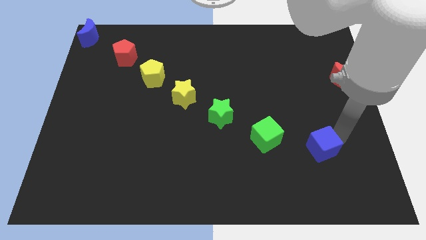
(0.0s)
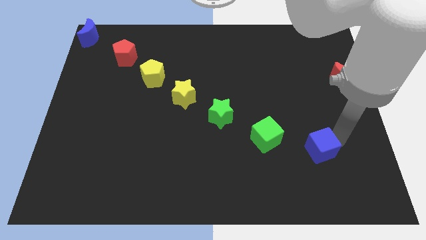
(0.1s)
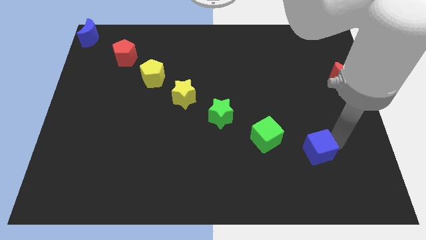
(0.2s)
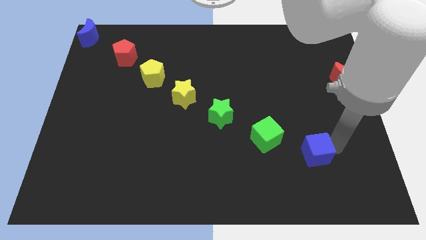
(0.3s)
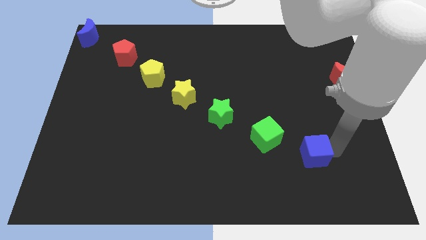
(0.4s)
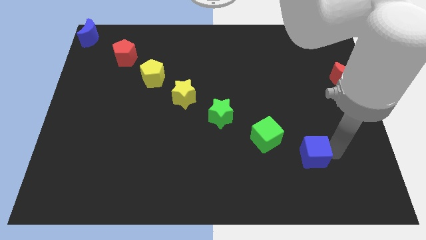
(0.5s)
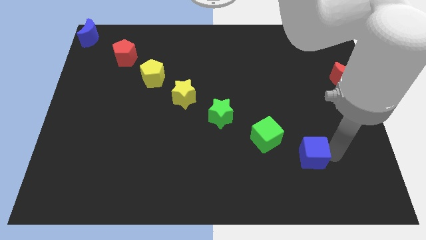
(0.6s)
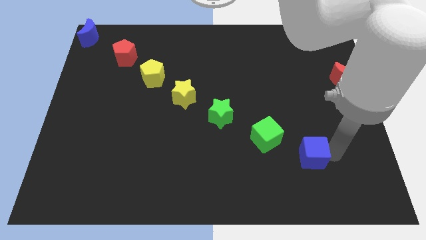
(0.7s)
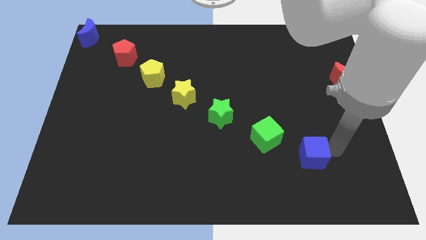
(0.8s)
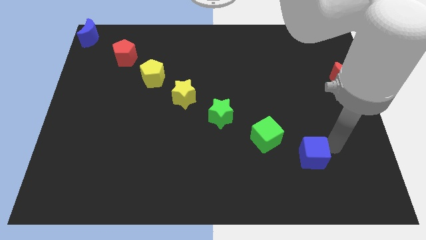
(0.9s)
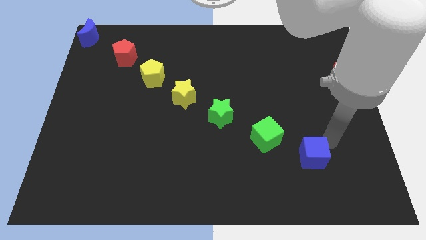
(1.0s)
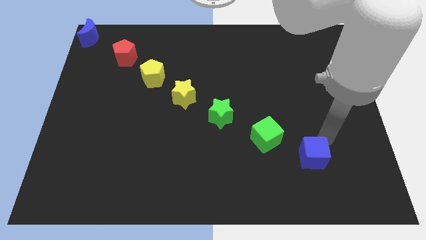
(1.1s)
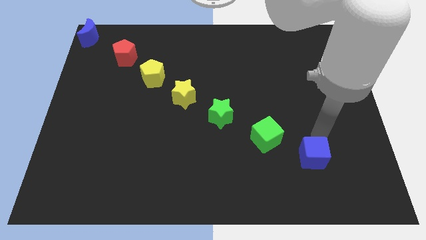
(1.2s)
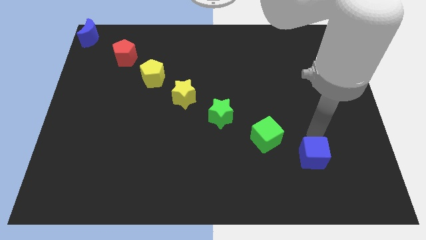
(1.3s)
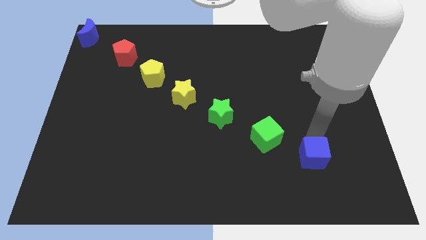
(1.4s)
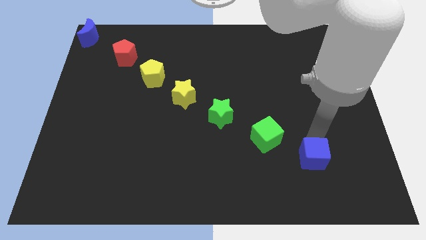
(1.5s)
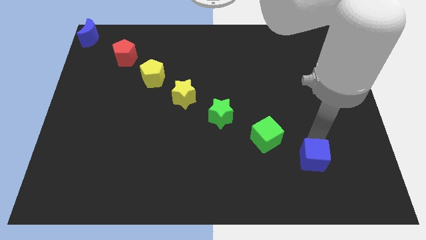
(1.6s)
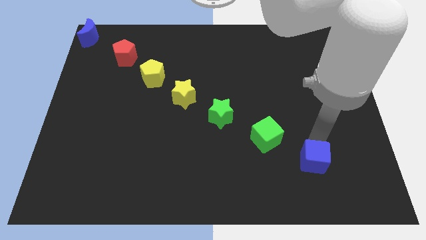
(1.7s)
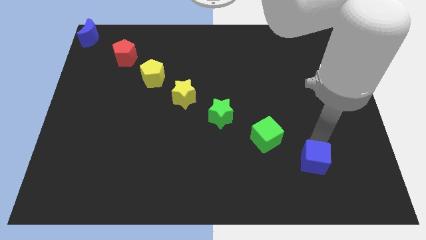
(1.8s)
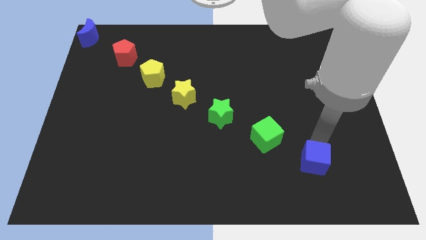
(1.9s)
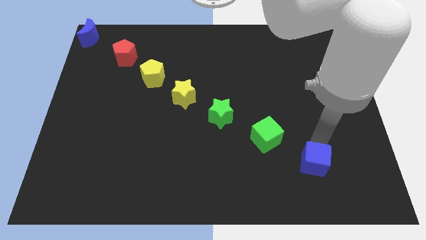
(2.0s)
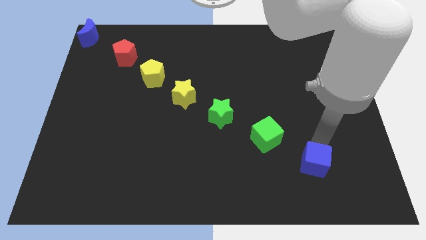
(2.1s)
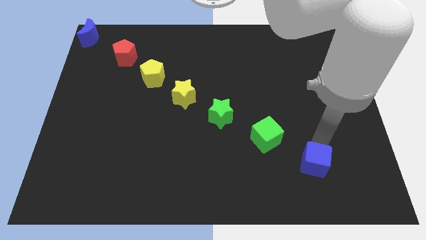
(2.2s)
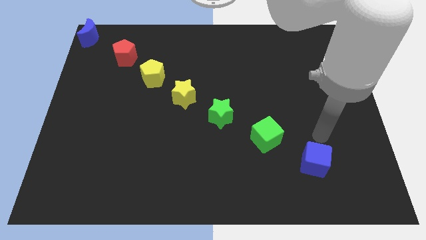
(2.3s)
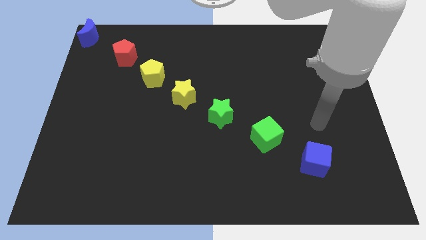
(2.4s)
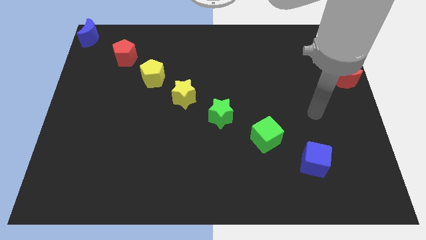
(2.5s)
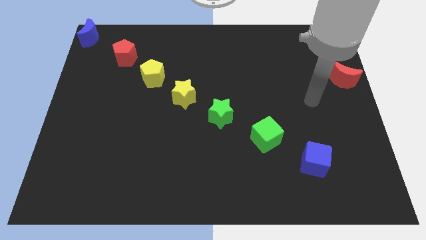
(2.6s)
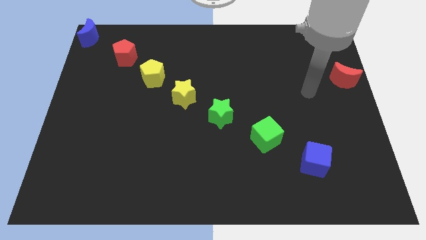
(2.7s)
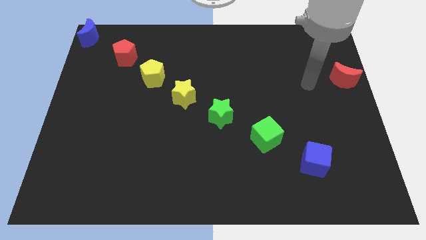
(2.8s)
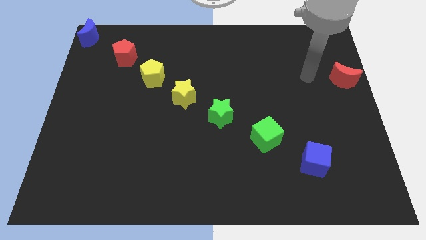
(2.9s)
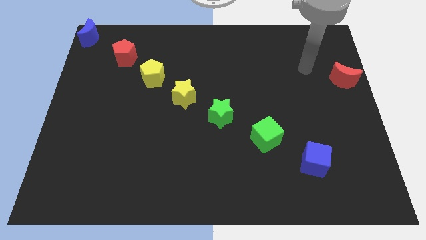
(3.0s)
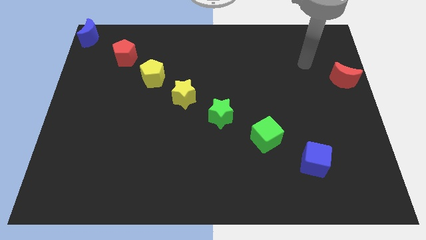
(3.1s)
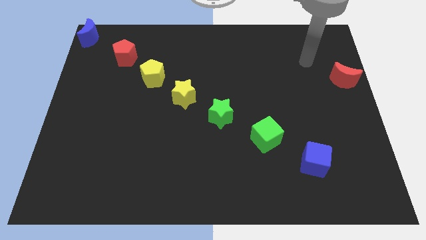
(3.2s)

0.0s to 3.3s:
place blue cube diagonally right to green cube

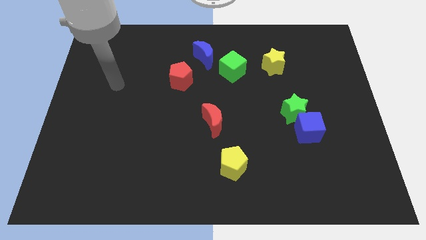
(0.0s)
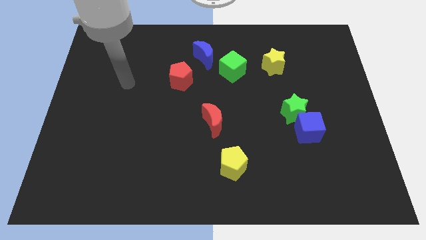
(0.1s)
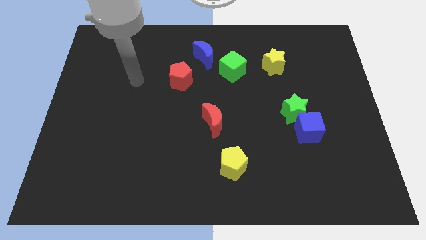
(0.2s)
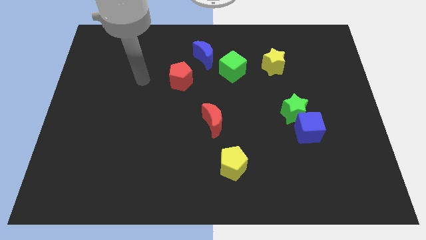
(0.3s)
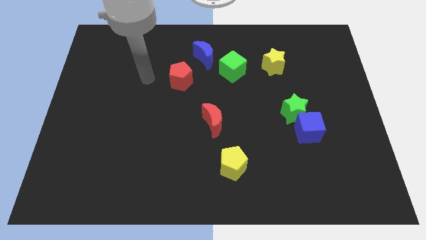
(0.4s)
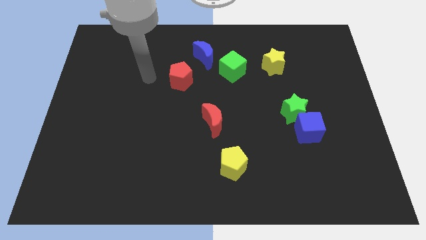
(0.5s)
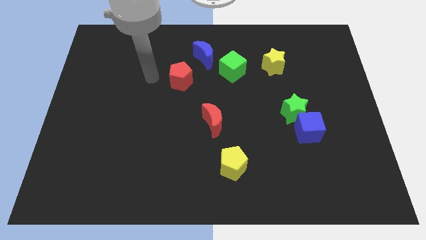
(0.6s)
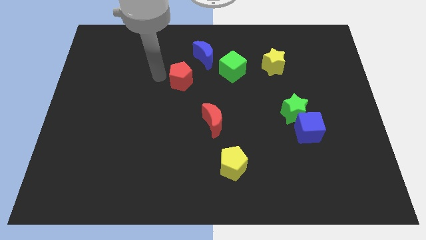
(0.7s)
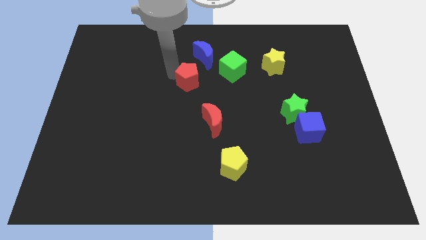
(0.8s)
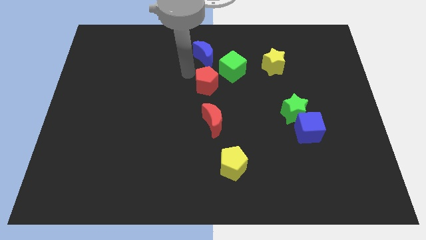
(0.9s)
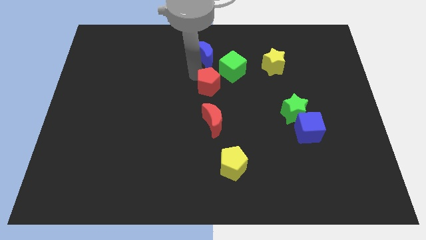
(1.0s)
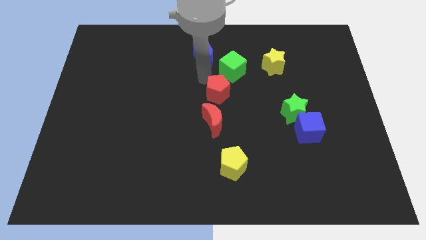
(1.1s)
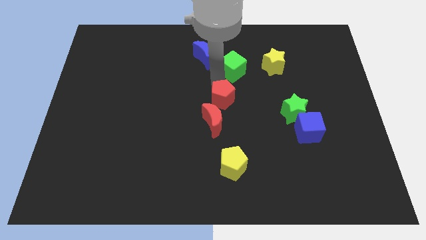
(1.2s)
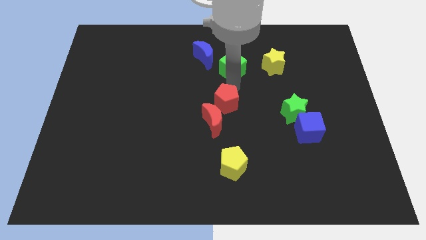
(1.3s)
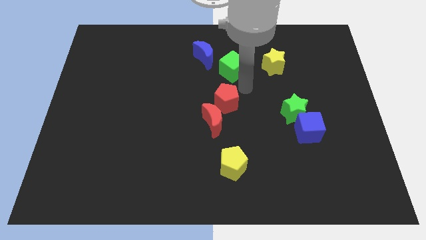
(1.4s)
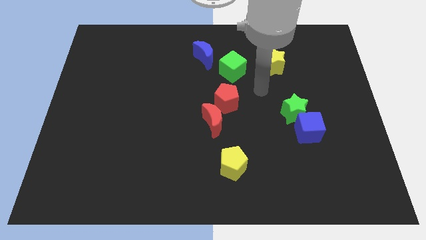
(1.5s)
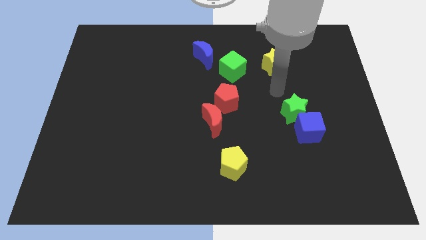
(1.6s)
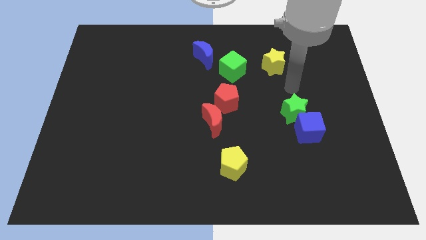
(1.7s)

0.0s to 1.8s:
push the red pentagon to the right side of the board

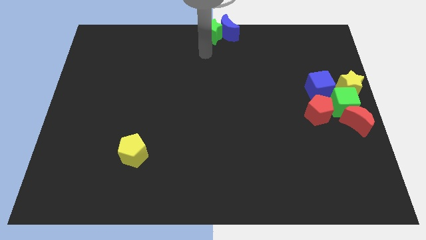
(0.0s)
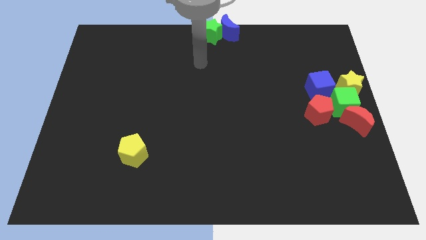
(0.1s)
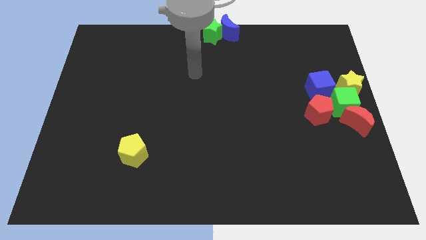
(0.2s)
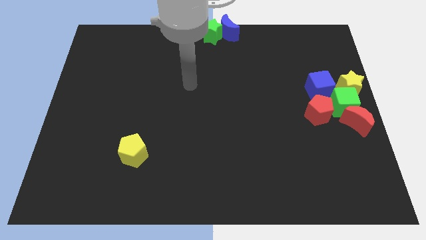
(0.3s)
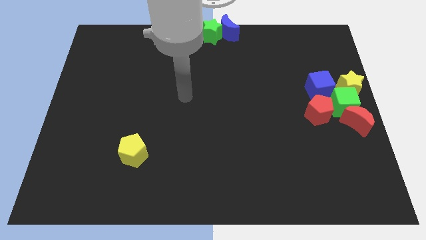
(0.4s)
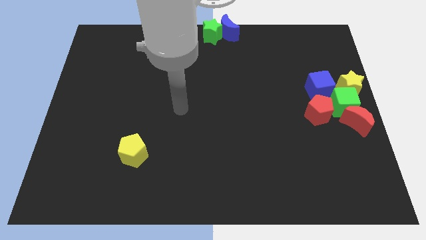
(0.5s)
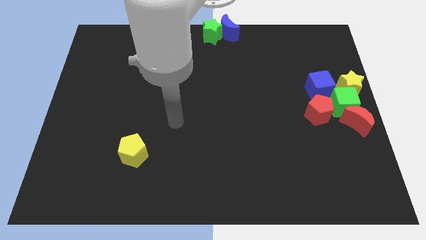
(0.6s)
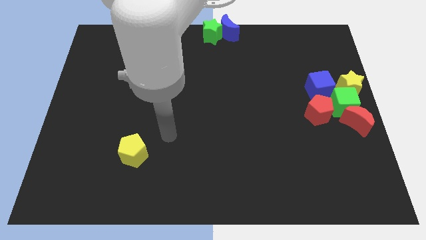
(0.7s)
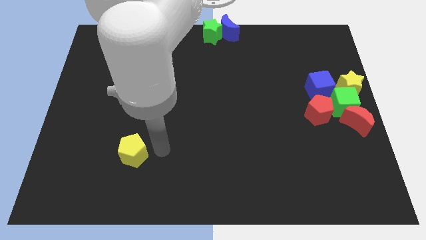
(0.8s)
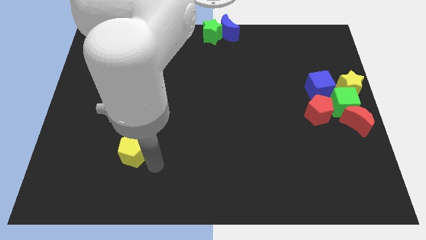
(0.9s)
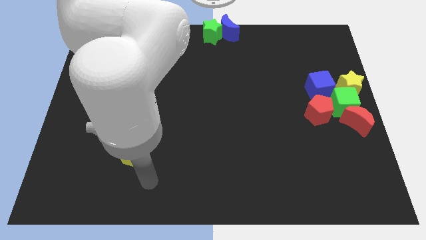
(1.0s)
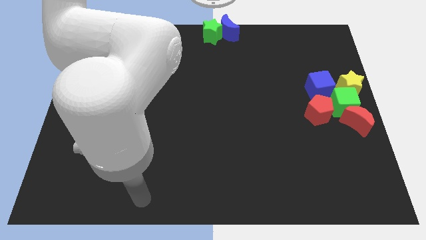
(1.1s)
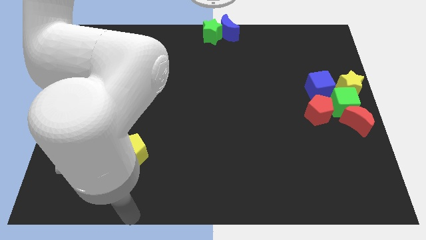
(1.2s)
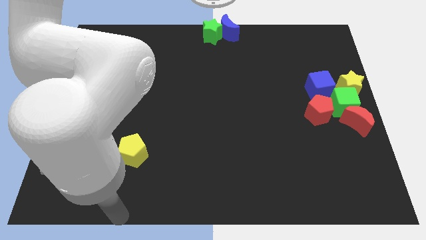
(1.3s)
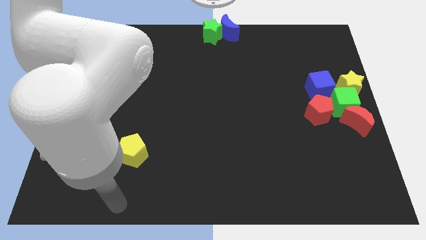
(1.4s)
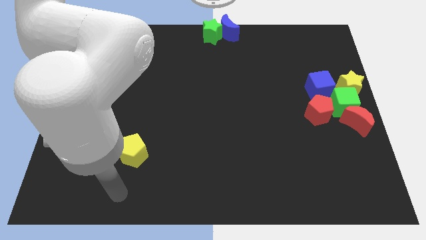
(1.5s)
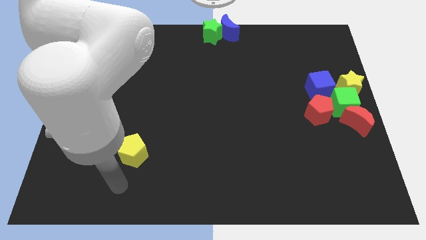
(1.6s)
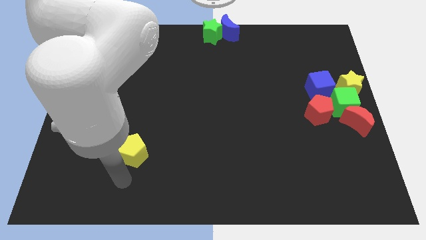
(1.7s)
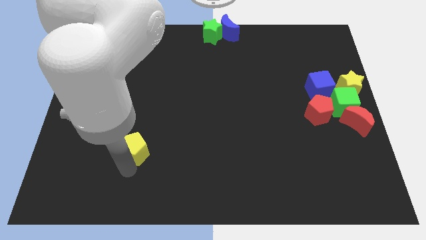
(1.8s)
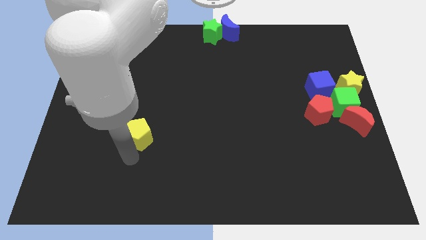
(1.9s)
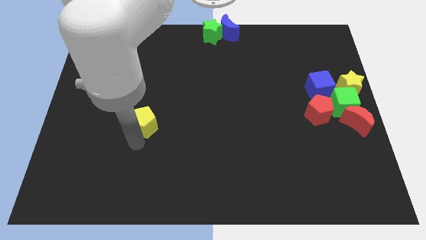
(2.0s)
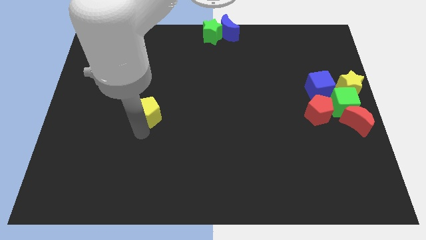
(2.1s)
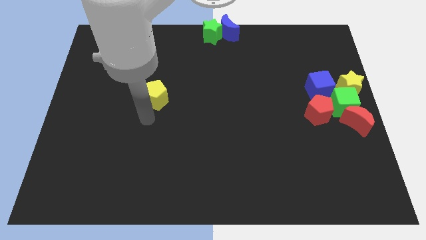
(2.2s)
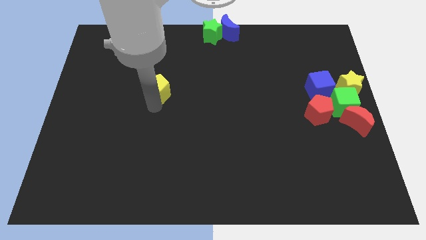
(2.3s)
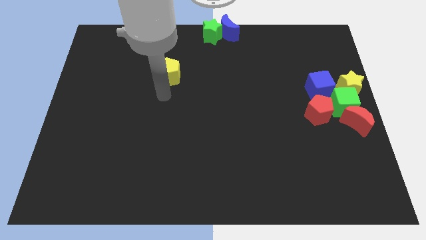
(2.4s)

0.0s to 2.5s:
push the yellow pentagon to the left of the blue cube

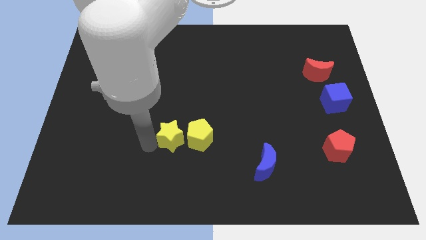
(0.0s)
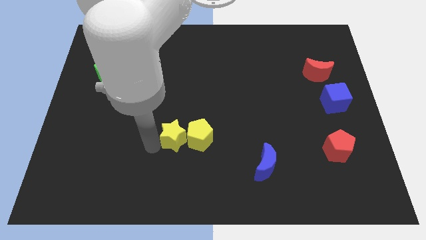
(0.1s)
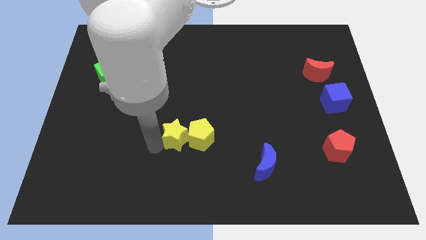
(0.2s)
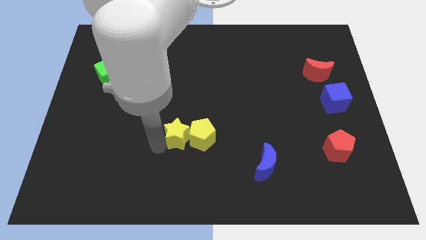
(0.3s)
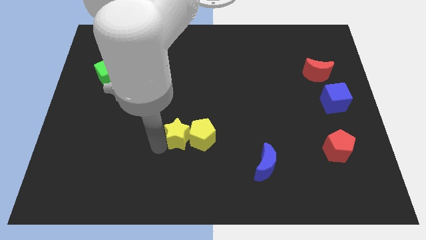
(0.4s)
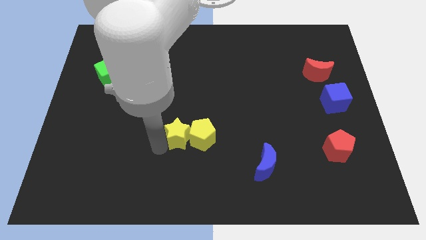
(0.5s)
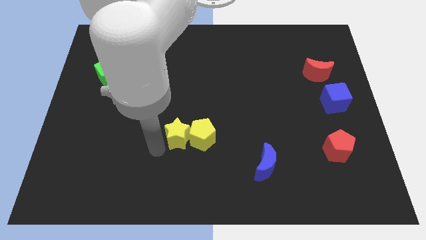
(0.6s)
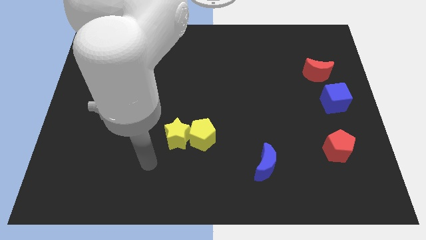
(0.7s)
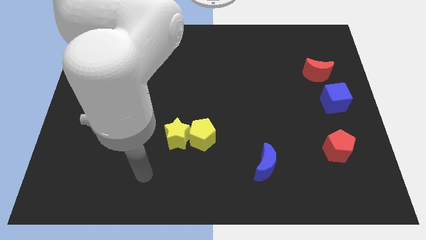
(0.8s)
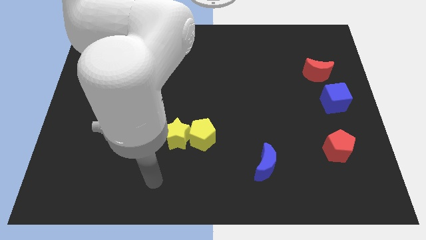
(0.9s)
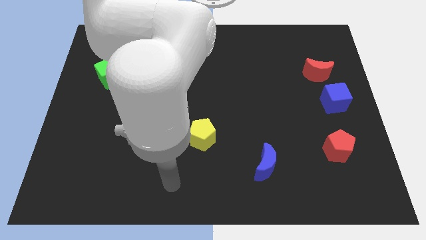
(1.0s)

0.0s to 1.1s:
push the yellow star into the yellow pentagon

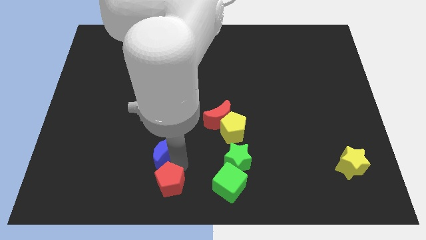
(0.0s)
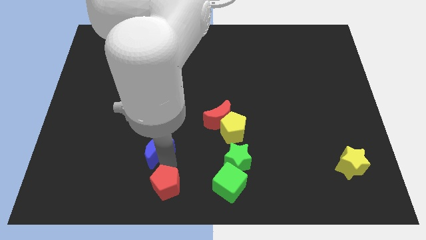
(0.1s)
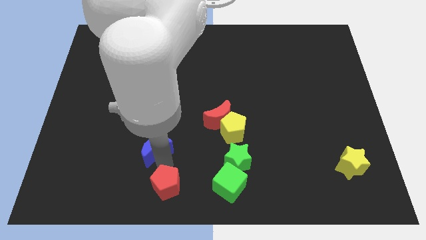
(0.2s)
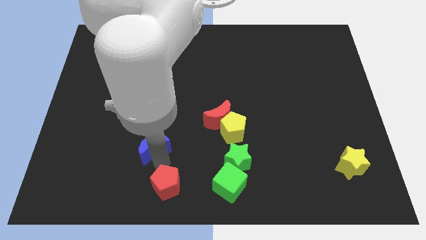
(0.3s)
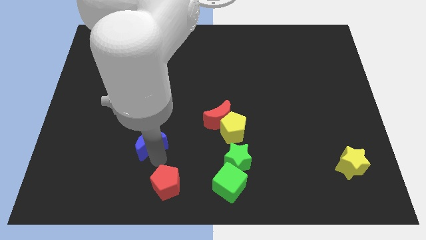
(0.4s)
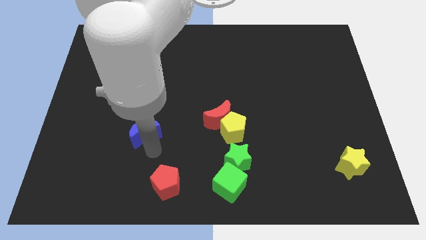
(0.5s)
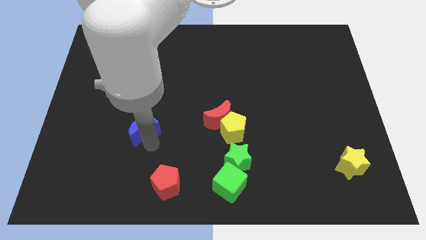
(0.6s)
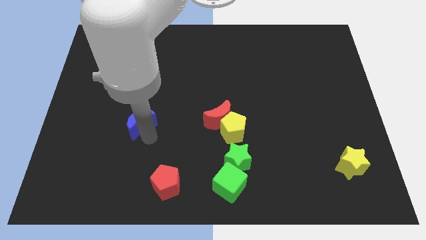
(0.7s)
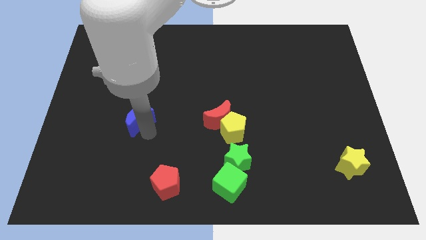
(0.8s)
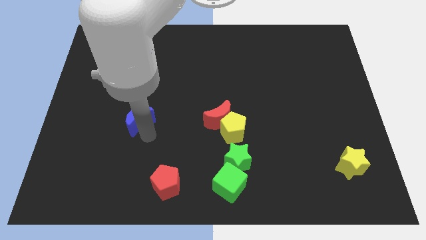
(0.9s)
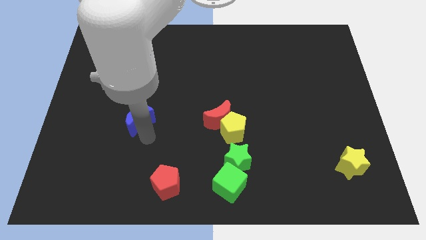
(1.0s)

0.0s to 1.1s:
move the blue crescent away from red pentagon
